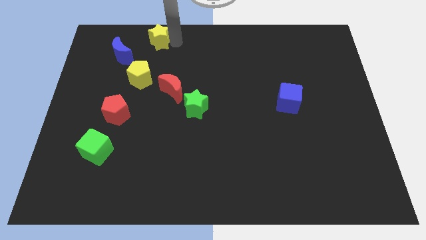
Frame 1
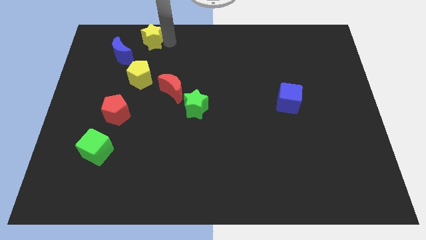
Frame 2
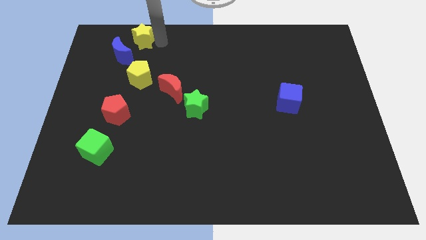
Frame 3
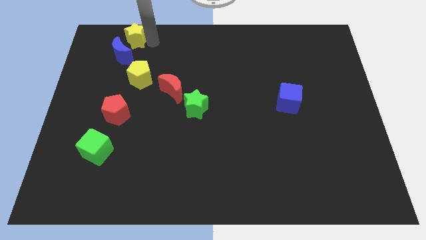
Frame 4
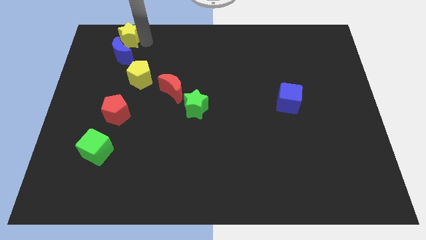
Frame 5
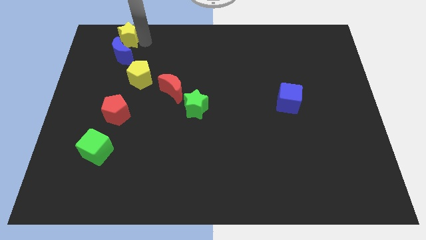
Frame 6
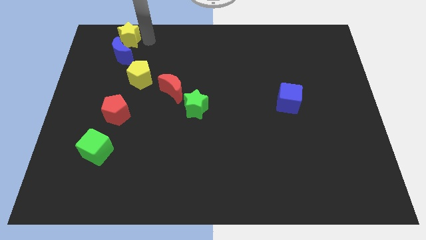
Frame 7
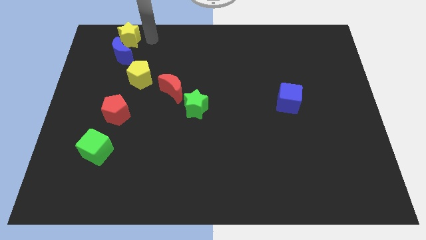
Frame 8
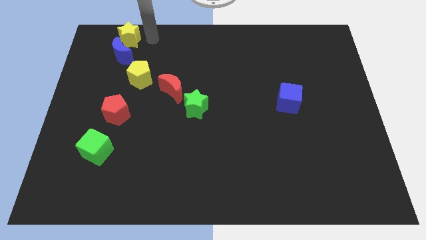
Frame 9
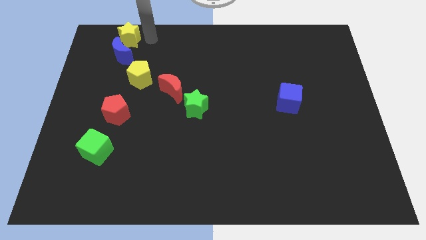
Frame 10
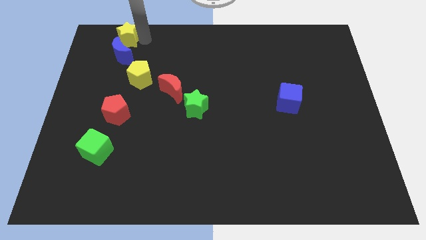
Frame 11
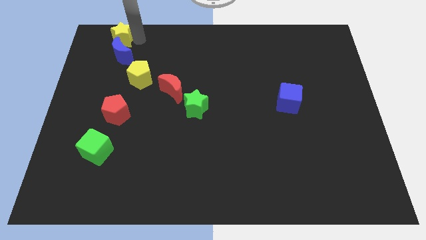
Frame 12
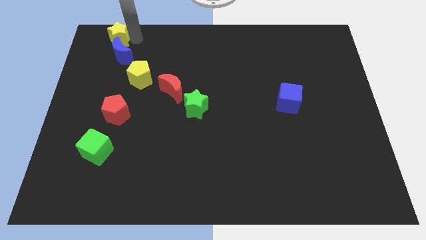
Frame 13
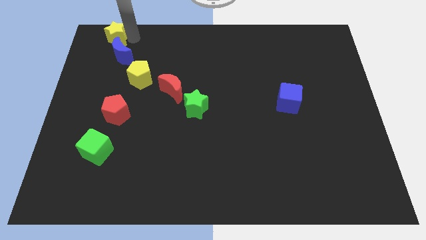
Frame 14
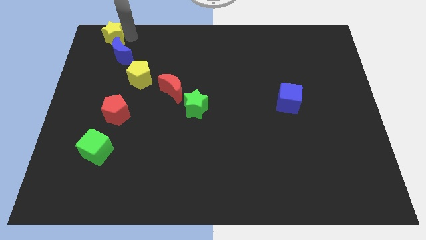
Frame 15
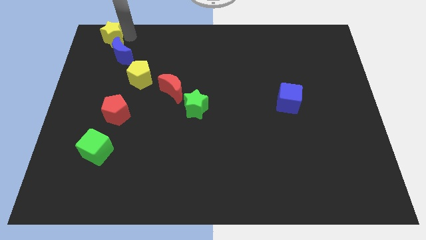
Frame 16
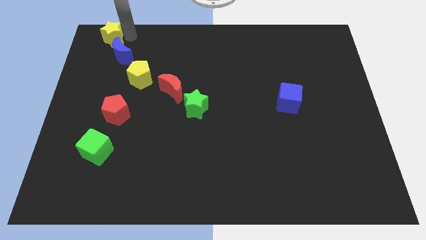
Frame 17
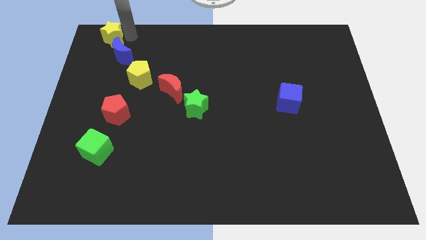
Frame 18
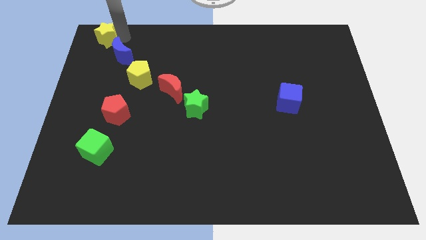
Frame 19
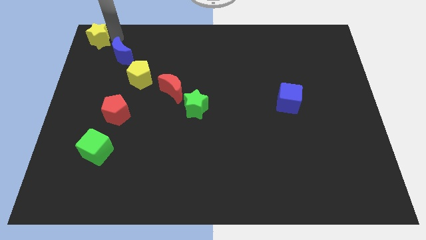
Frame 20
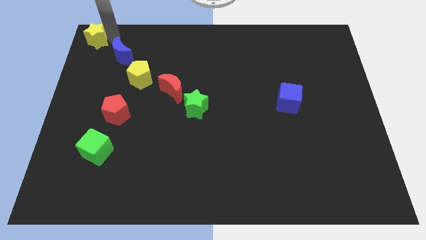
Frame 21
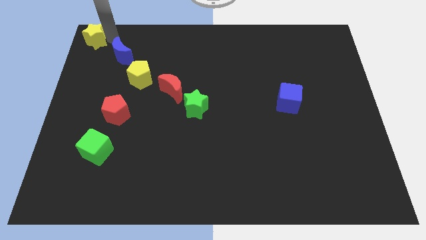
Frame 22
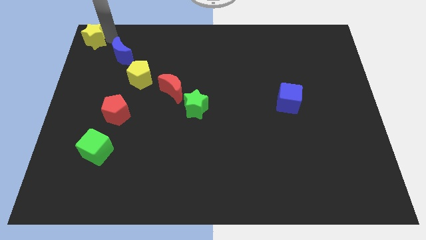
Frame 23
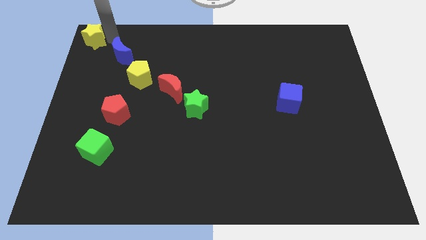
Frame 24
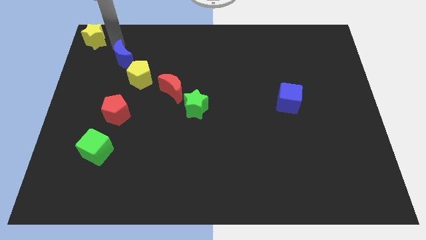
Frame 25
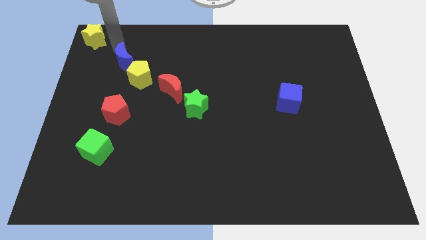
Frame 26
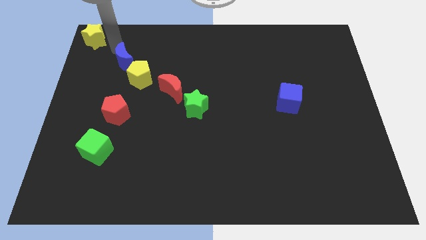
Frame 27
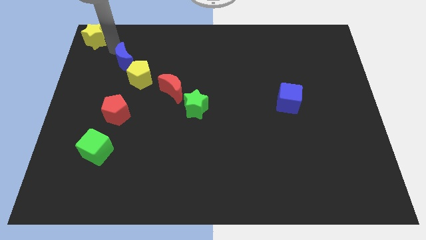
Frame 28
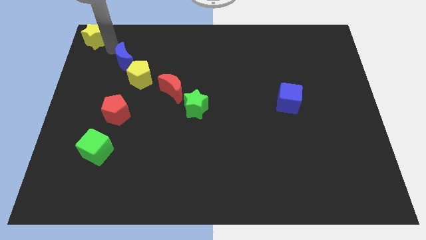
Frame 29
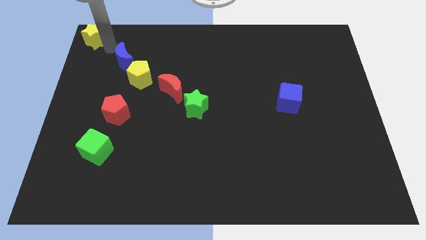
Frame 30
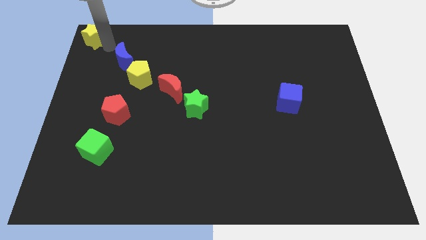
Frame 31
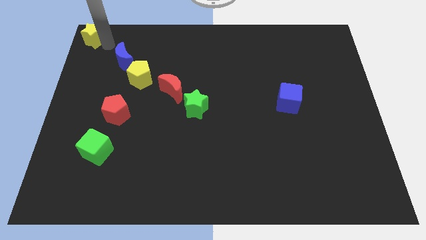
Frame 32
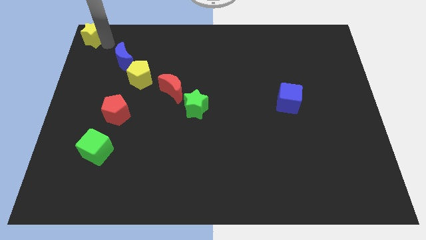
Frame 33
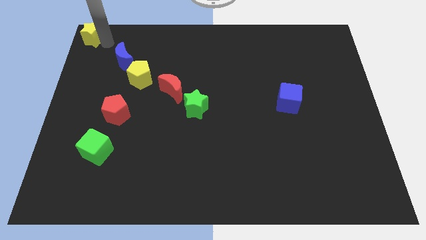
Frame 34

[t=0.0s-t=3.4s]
slide the yellow star to the top left corner

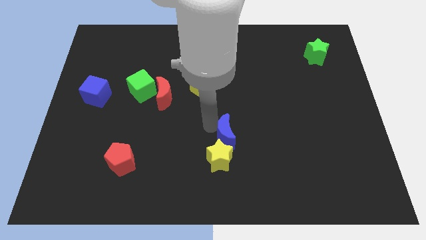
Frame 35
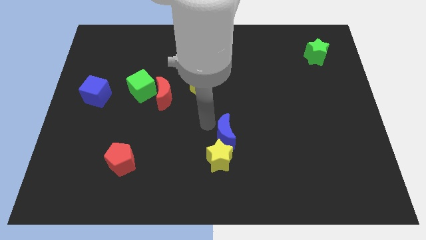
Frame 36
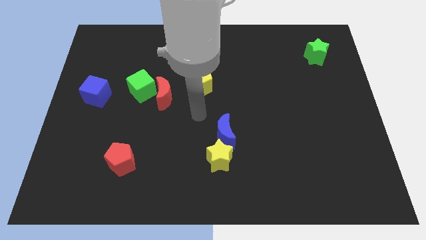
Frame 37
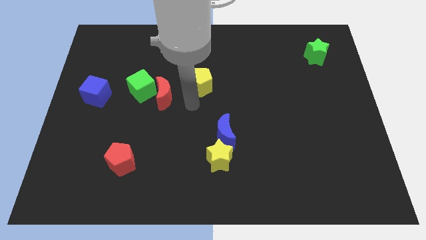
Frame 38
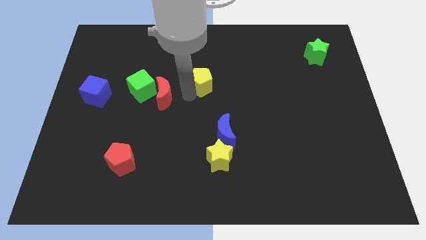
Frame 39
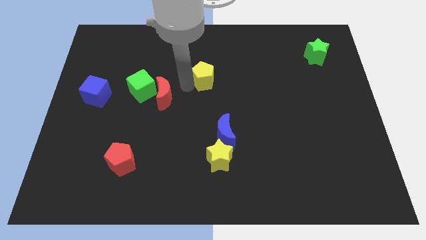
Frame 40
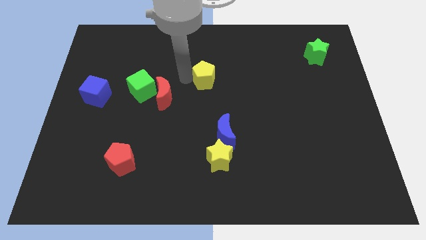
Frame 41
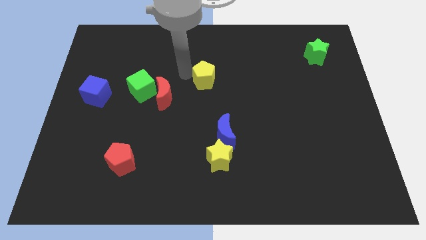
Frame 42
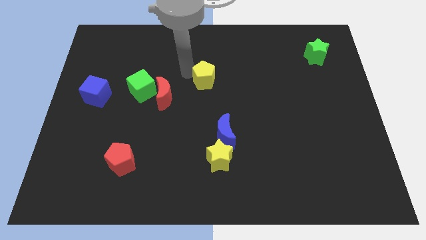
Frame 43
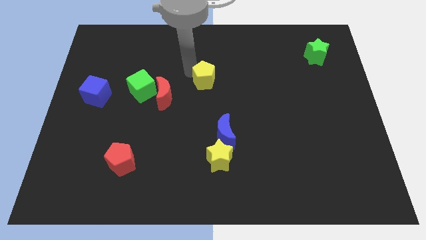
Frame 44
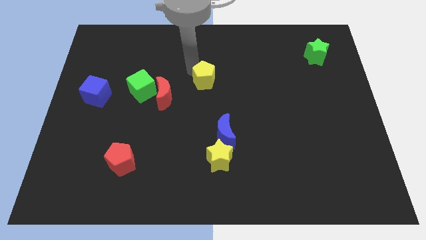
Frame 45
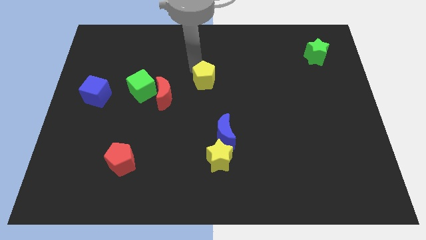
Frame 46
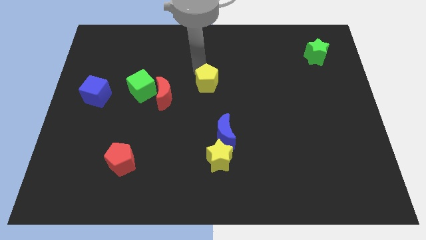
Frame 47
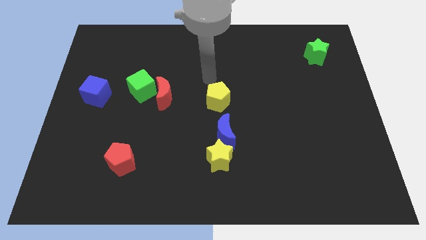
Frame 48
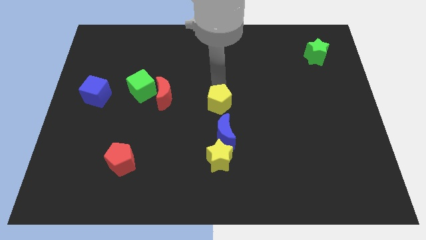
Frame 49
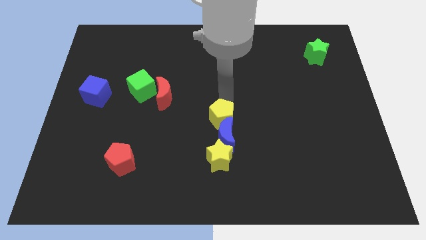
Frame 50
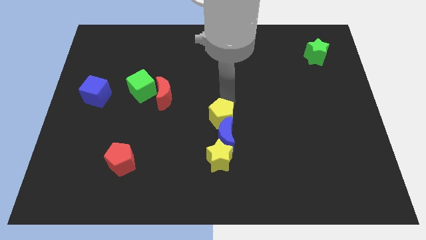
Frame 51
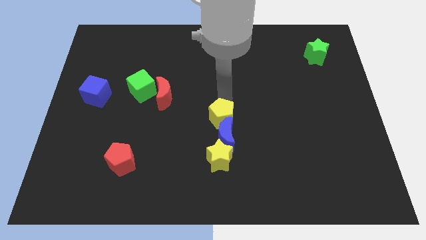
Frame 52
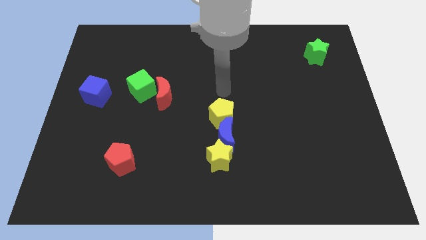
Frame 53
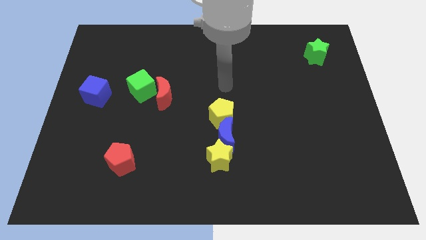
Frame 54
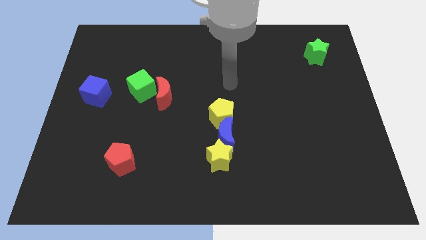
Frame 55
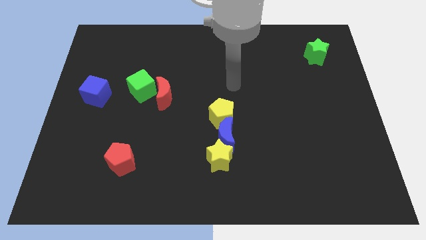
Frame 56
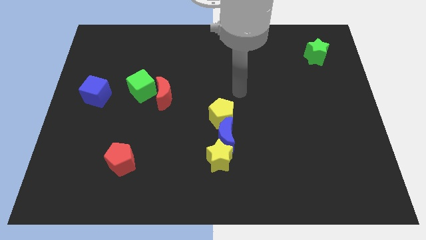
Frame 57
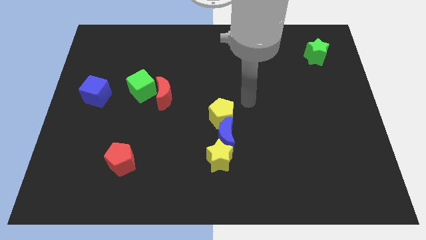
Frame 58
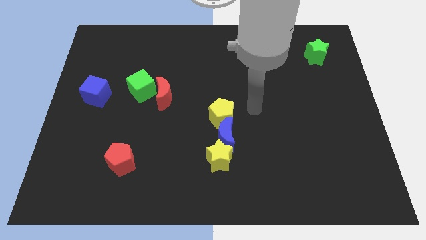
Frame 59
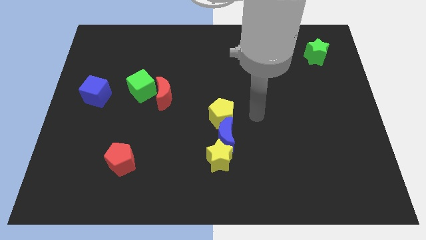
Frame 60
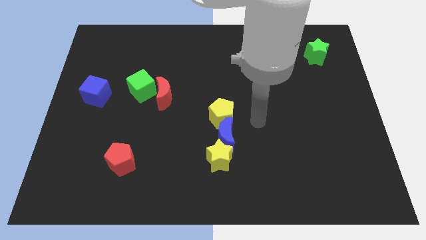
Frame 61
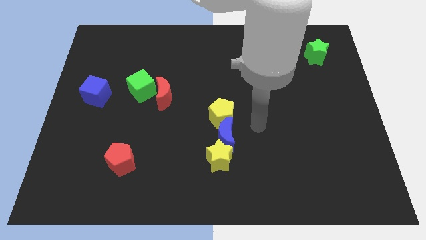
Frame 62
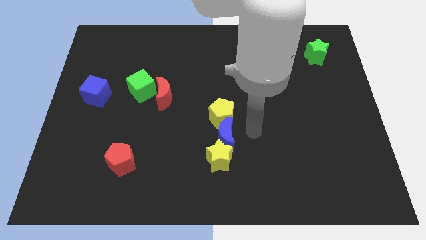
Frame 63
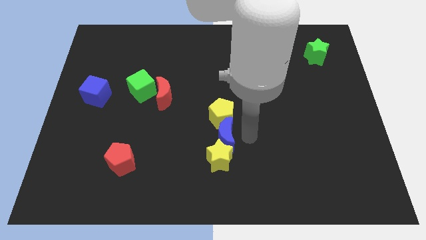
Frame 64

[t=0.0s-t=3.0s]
push the yellow pentagon to the top side of the blue moon

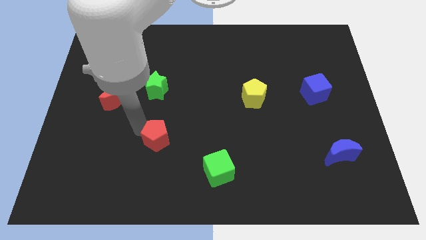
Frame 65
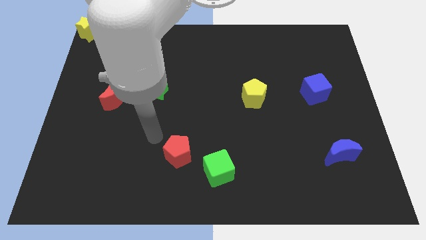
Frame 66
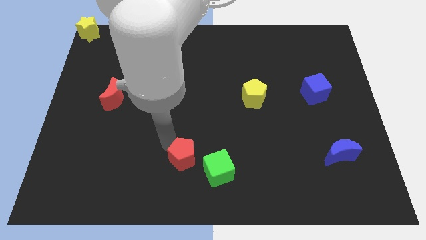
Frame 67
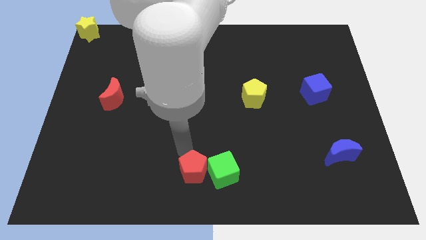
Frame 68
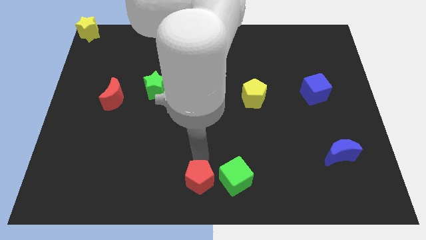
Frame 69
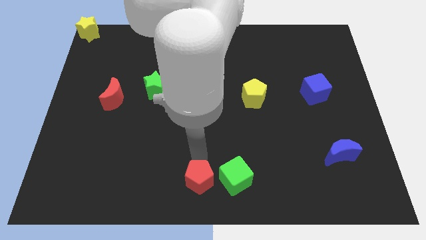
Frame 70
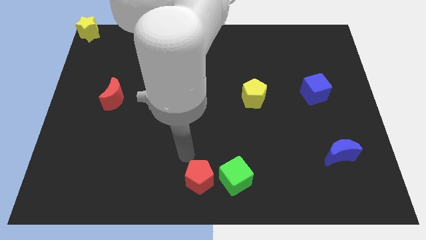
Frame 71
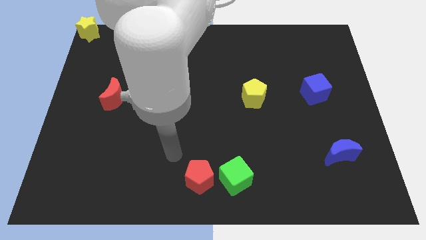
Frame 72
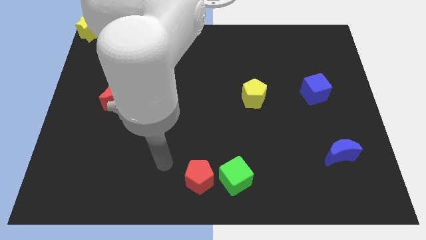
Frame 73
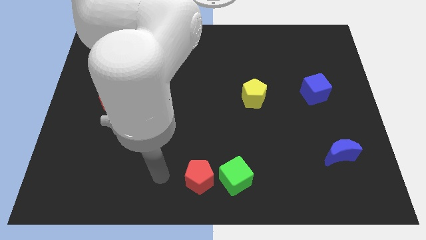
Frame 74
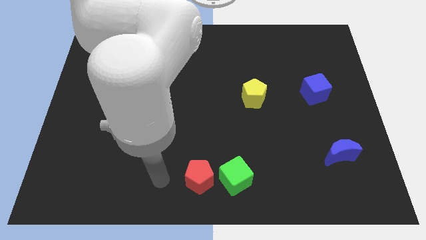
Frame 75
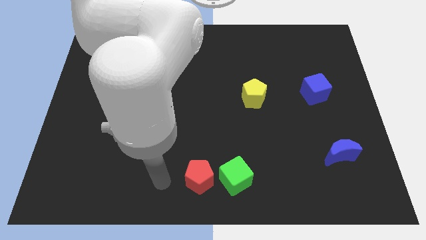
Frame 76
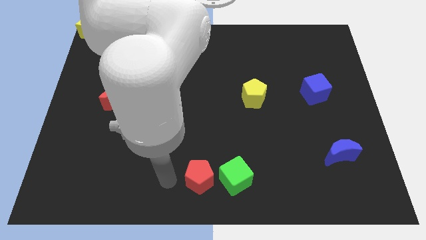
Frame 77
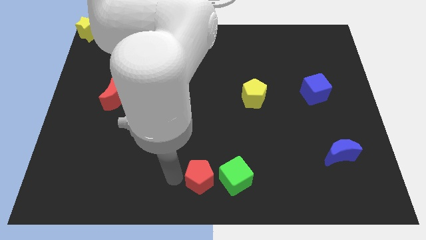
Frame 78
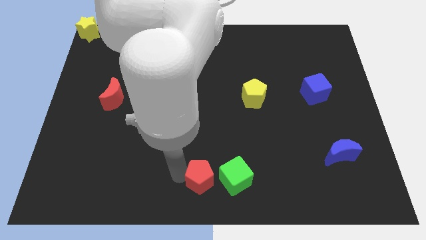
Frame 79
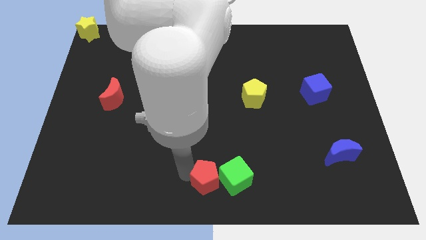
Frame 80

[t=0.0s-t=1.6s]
push the red pentagon into the green cube

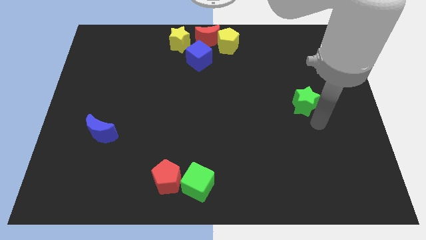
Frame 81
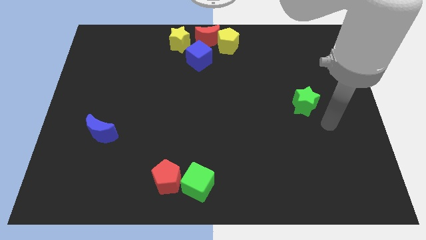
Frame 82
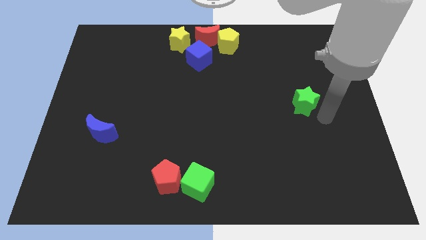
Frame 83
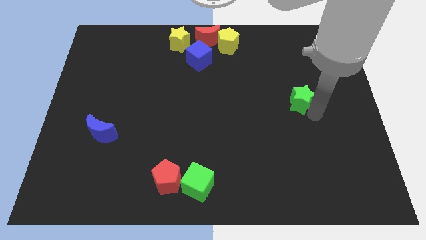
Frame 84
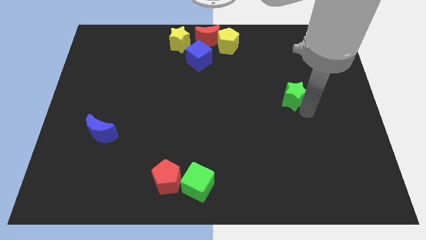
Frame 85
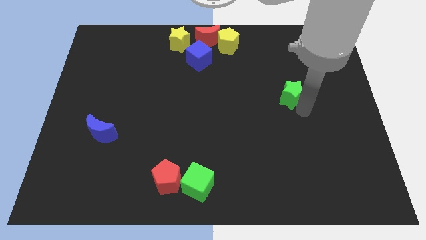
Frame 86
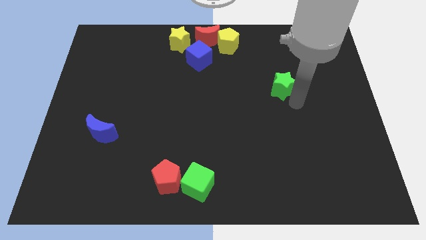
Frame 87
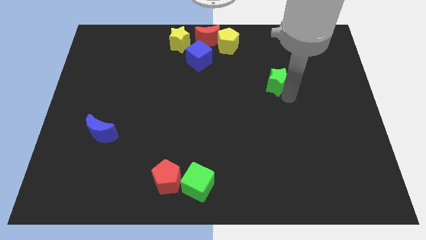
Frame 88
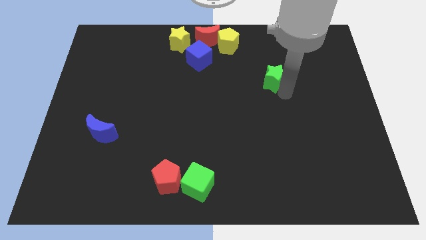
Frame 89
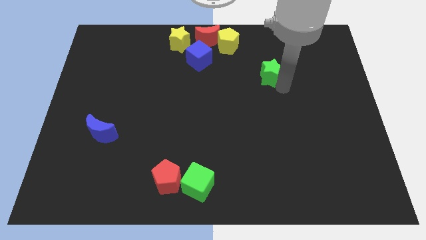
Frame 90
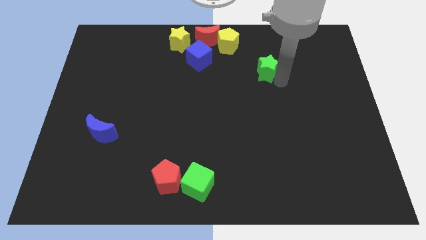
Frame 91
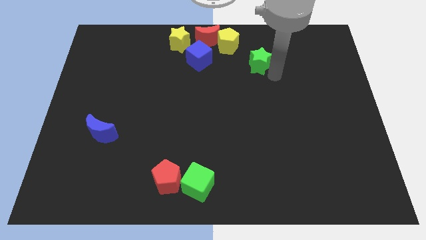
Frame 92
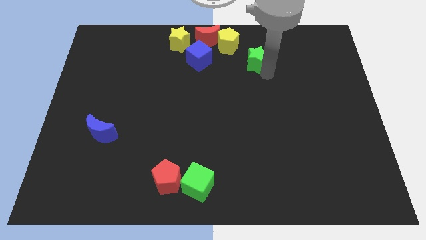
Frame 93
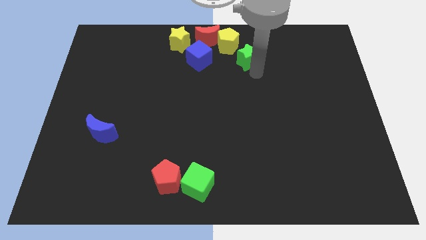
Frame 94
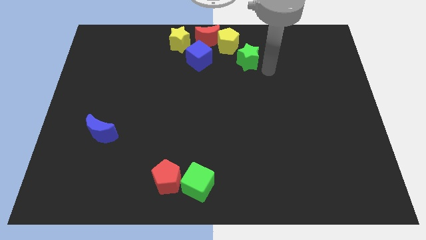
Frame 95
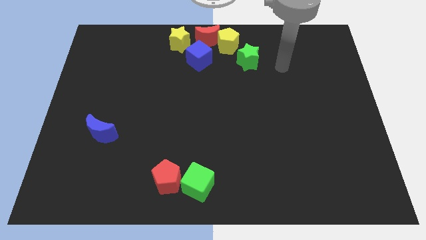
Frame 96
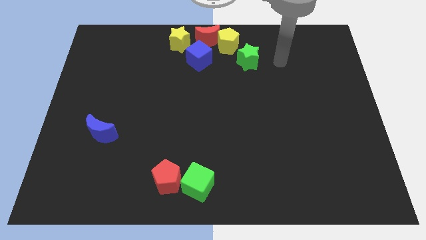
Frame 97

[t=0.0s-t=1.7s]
move the green star towards yellow pentagon
